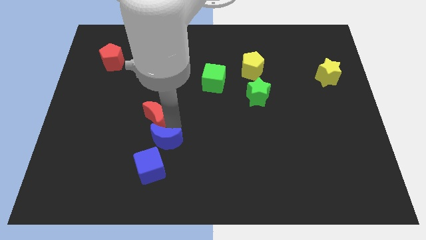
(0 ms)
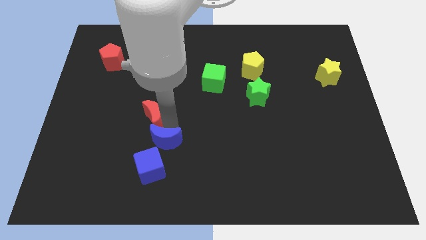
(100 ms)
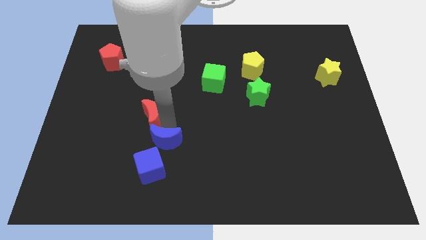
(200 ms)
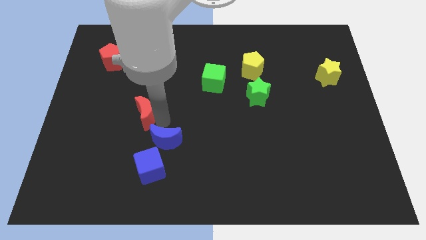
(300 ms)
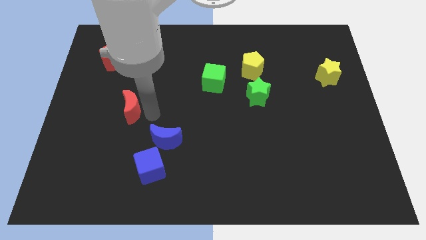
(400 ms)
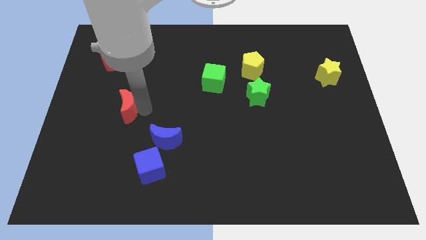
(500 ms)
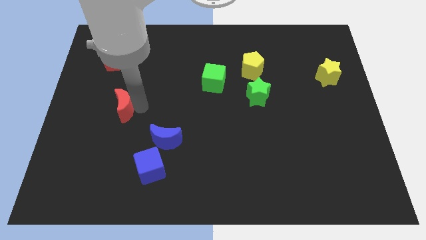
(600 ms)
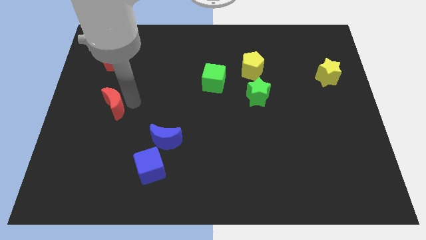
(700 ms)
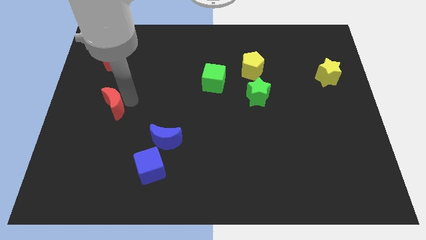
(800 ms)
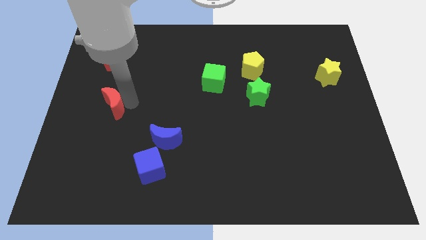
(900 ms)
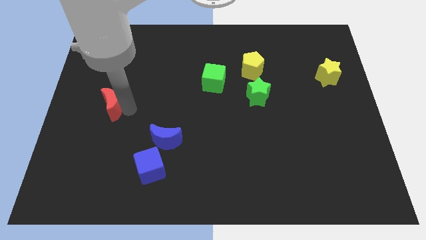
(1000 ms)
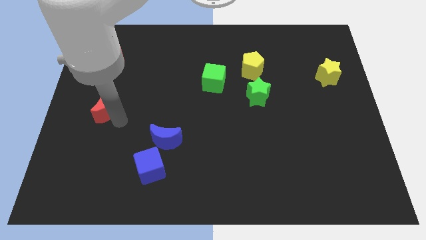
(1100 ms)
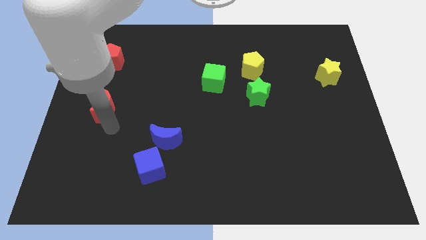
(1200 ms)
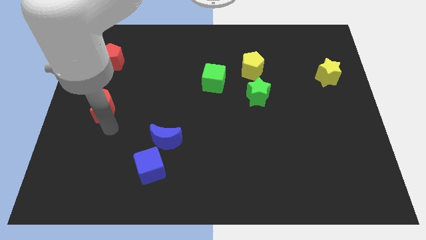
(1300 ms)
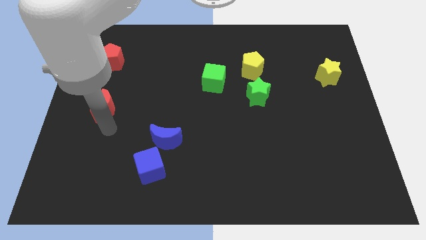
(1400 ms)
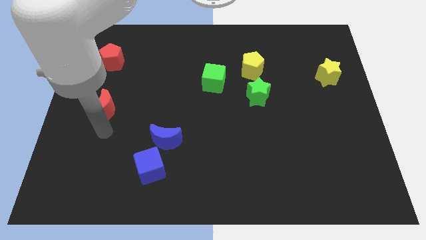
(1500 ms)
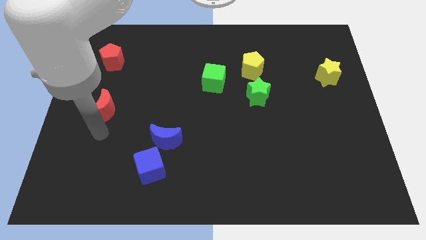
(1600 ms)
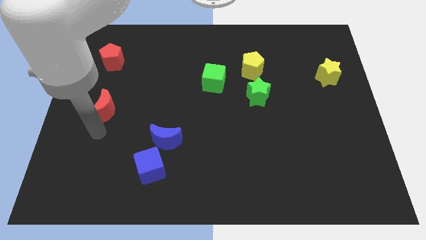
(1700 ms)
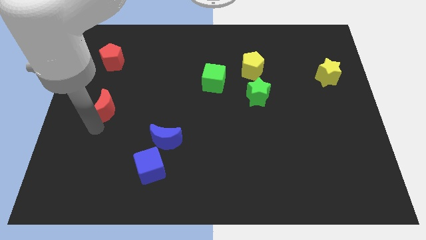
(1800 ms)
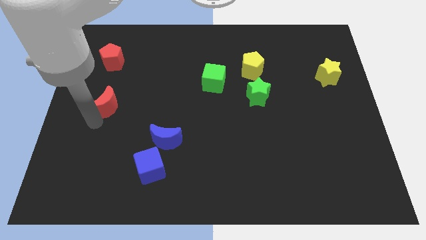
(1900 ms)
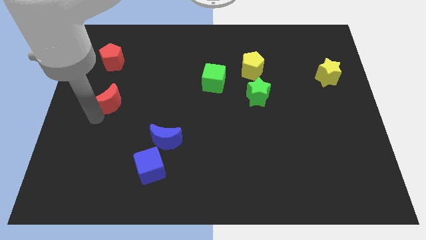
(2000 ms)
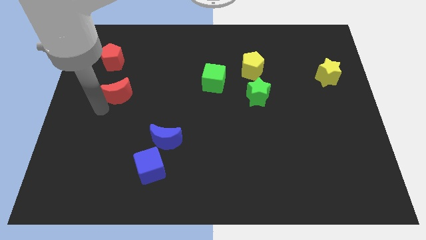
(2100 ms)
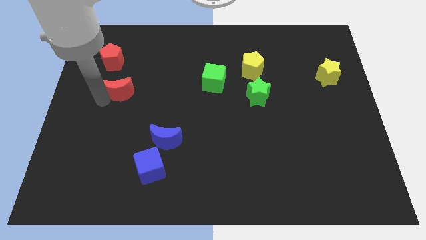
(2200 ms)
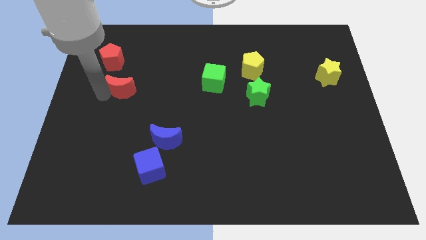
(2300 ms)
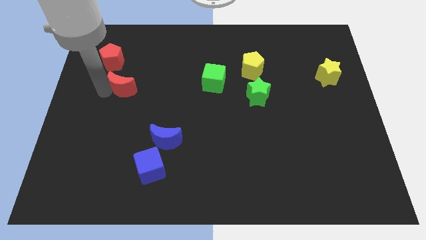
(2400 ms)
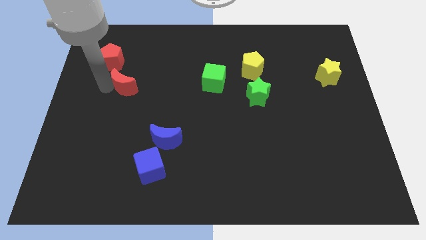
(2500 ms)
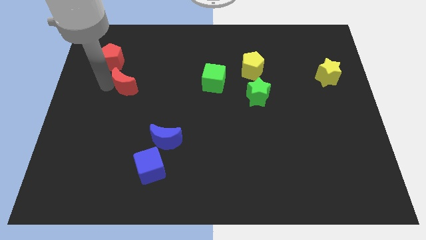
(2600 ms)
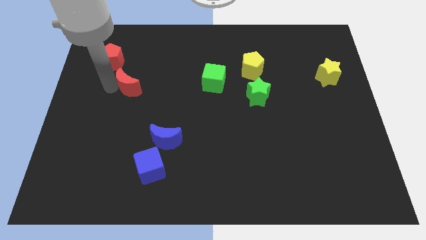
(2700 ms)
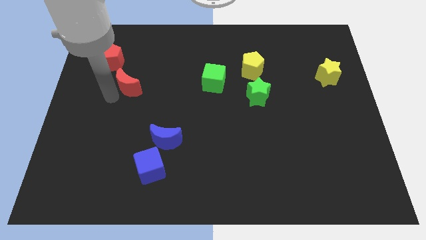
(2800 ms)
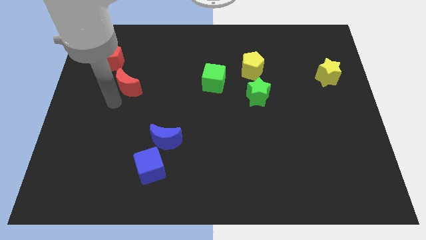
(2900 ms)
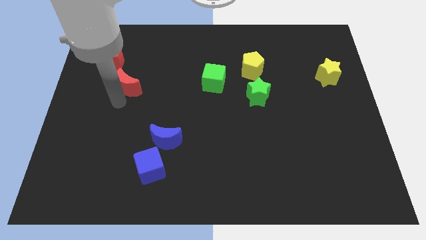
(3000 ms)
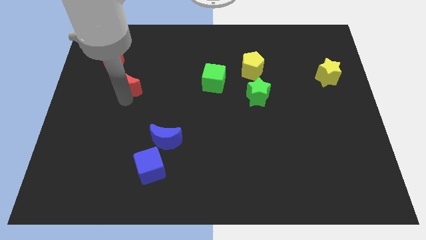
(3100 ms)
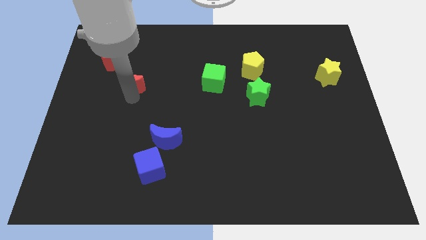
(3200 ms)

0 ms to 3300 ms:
move the red crescent towards the red pentagon

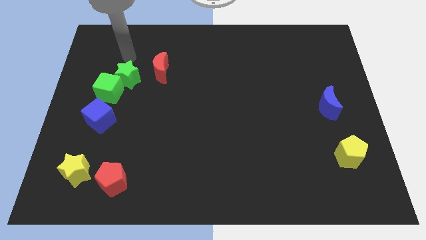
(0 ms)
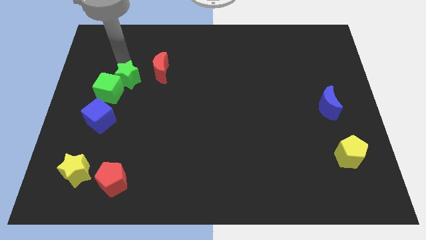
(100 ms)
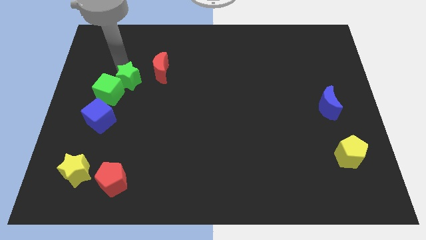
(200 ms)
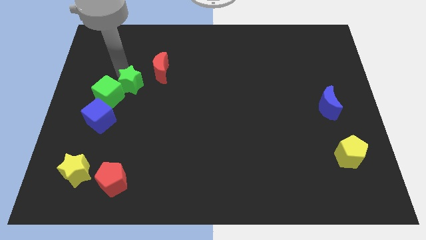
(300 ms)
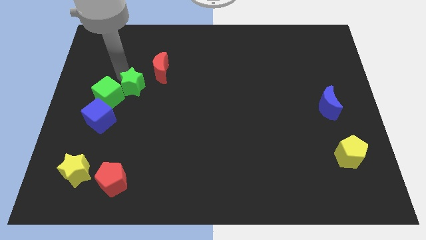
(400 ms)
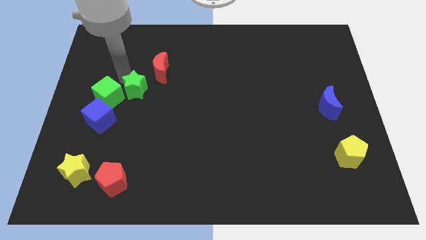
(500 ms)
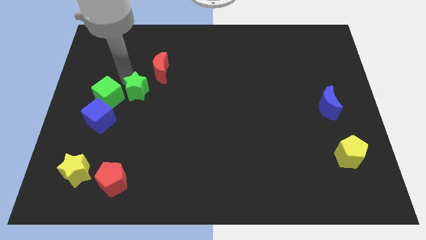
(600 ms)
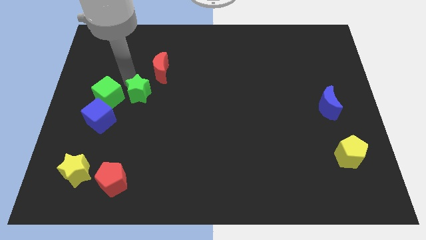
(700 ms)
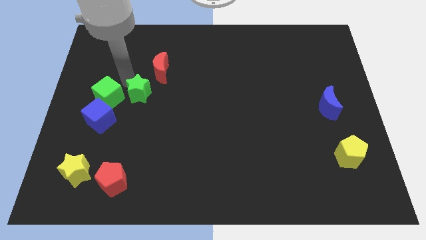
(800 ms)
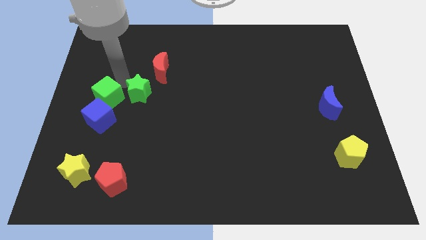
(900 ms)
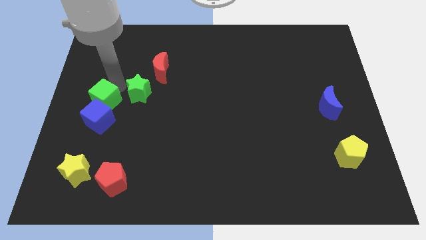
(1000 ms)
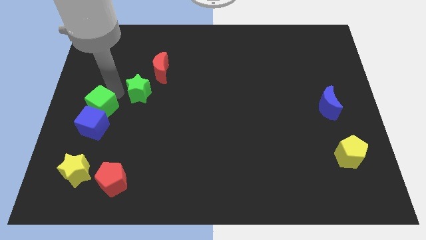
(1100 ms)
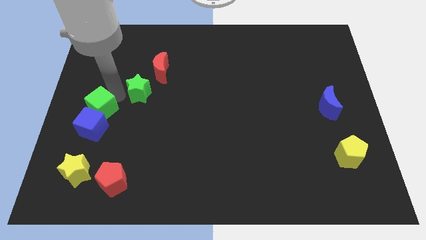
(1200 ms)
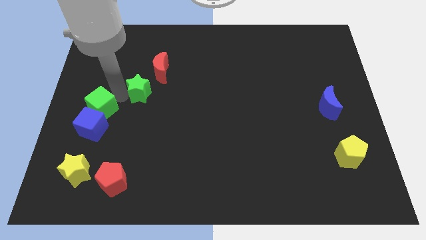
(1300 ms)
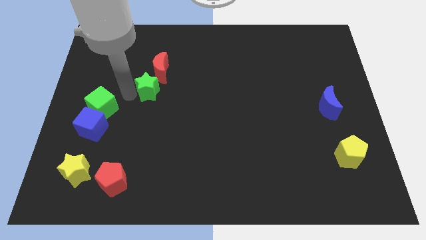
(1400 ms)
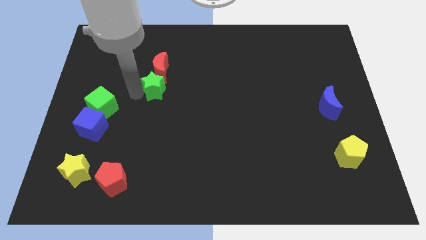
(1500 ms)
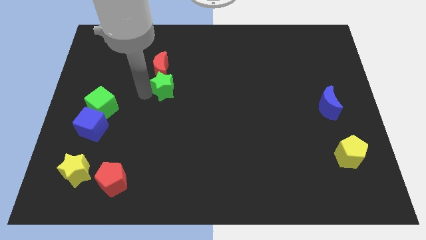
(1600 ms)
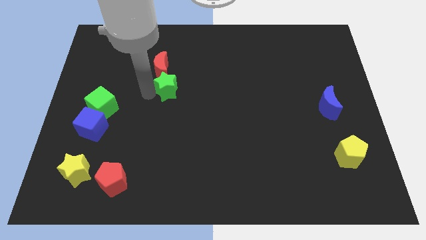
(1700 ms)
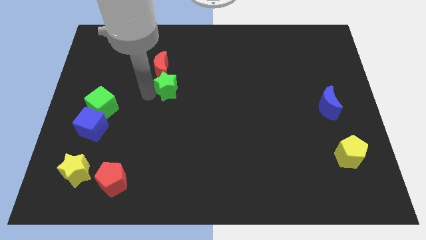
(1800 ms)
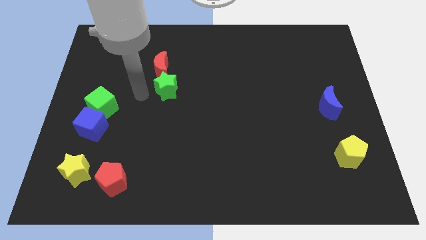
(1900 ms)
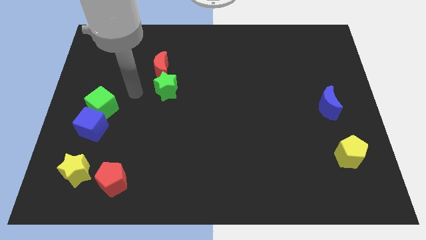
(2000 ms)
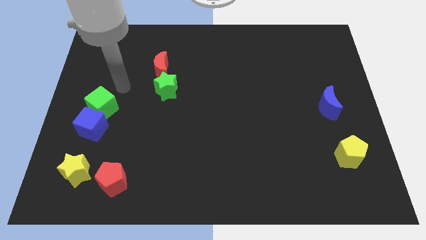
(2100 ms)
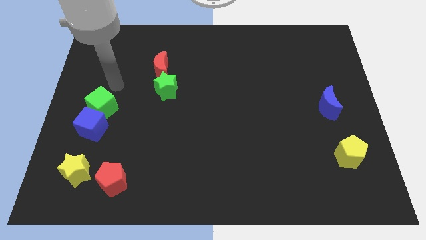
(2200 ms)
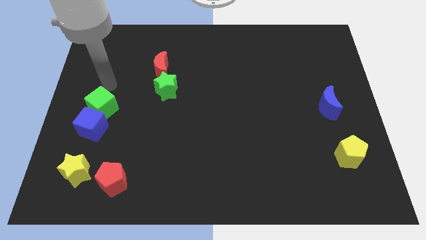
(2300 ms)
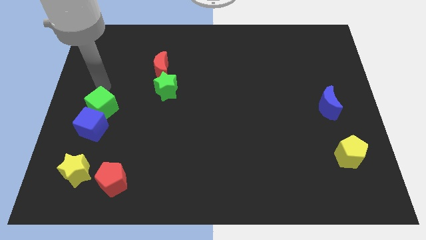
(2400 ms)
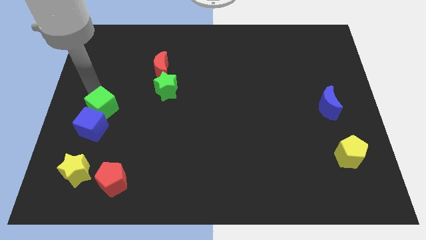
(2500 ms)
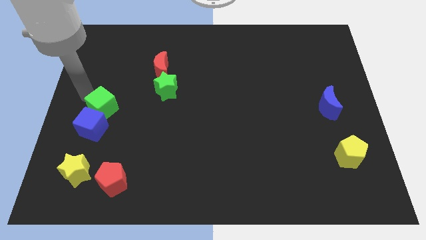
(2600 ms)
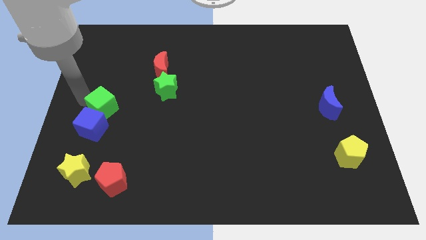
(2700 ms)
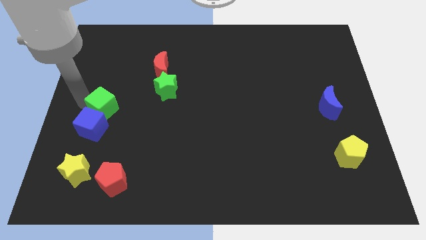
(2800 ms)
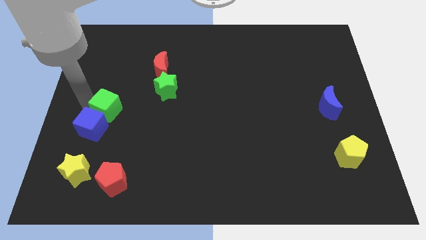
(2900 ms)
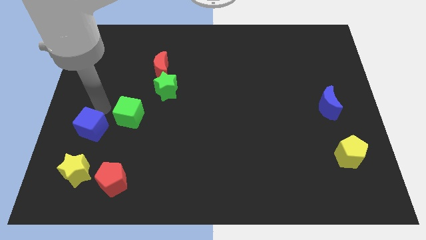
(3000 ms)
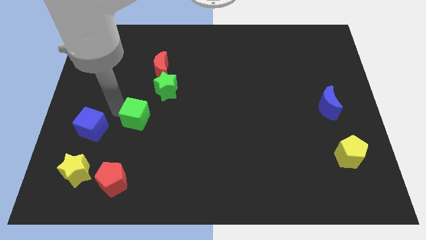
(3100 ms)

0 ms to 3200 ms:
separate green blocks from each other

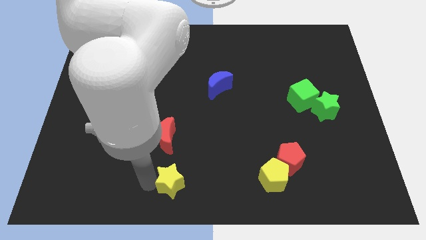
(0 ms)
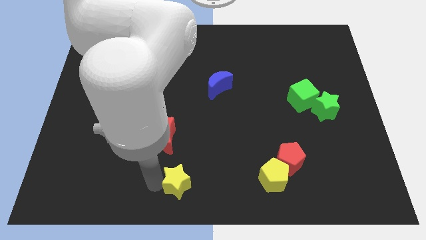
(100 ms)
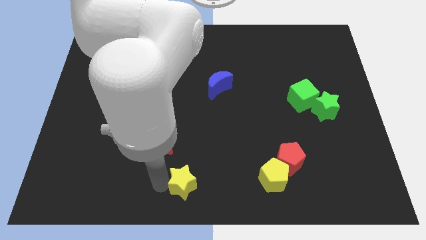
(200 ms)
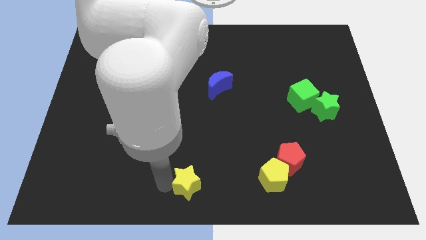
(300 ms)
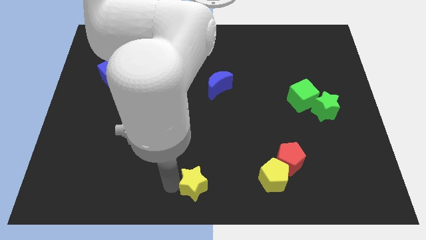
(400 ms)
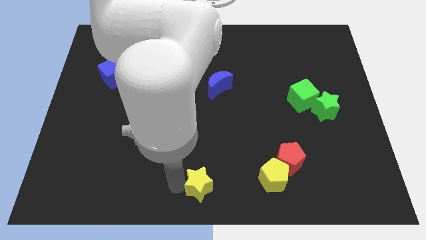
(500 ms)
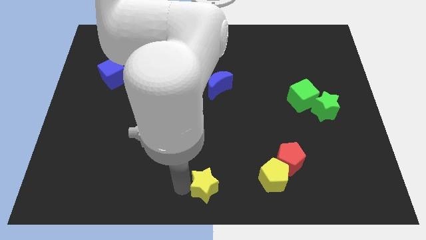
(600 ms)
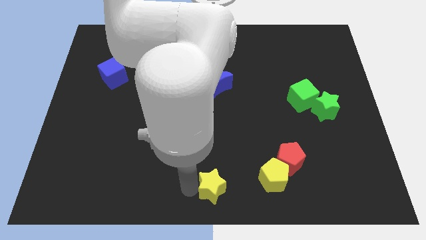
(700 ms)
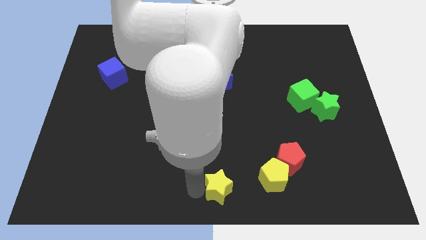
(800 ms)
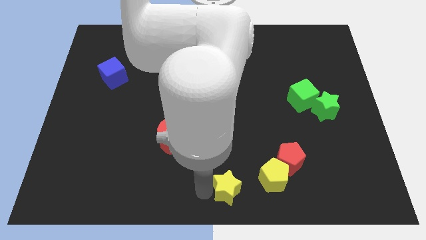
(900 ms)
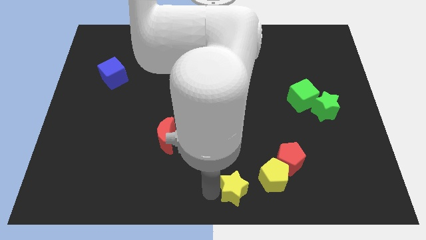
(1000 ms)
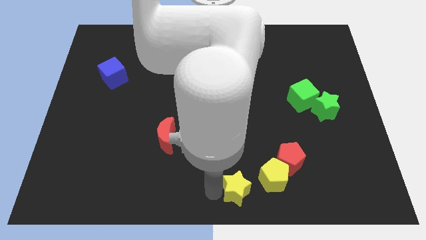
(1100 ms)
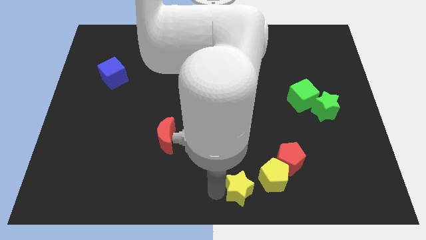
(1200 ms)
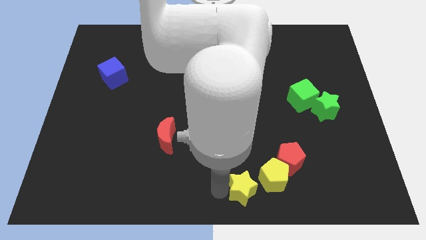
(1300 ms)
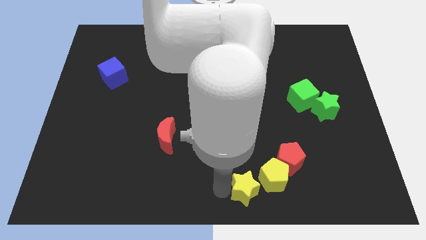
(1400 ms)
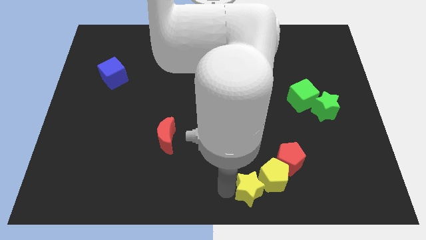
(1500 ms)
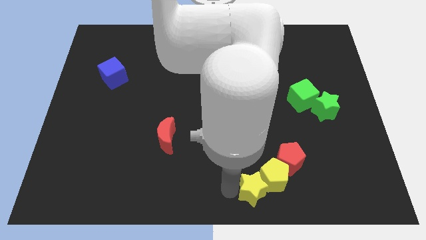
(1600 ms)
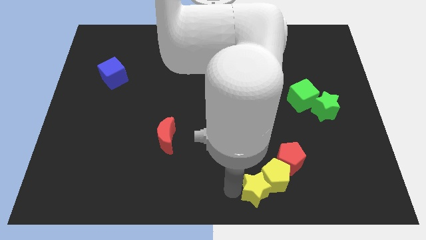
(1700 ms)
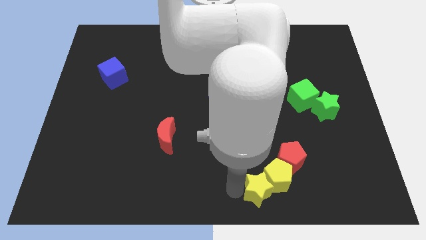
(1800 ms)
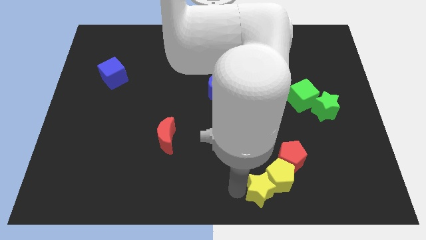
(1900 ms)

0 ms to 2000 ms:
move yellow star into yellow pentagon

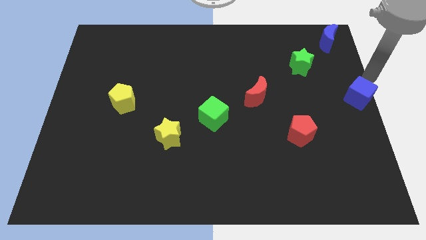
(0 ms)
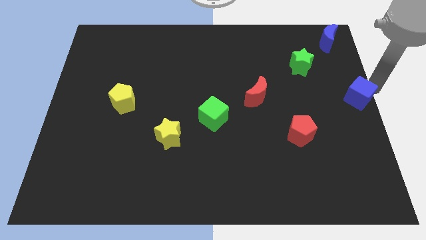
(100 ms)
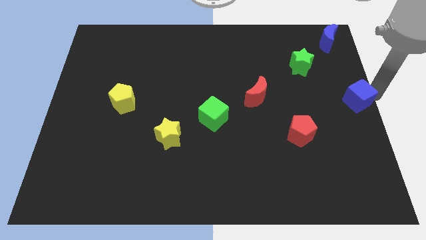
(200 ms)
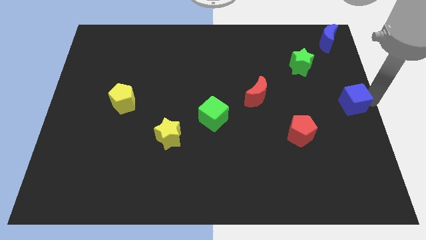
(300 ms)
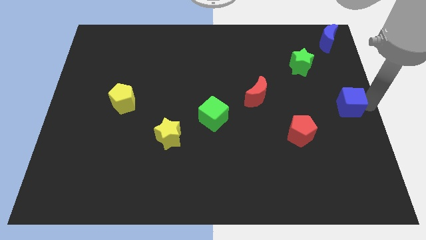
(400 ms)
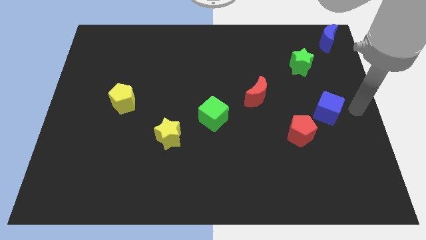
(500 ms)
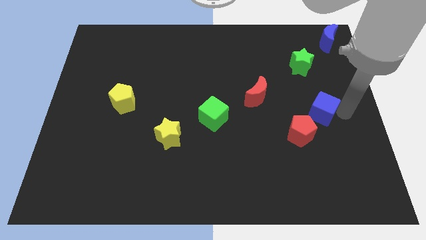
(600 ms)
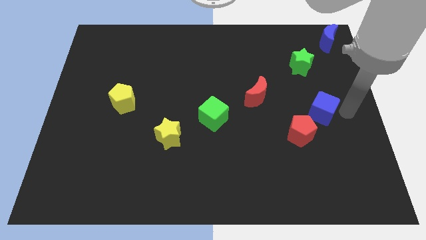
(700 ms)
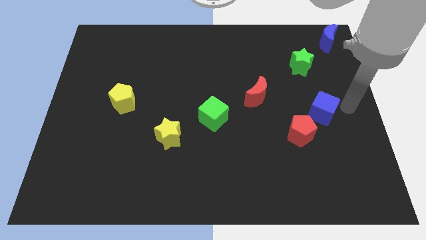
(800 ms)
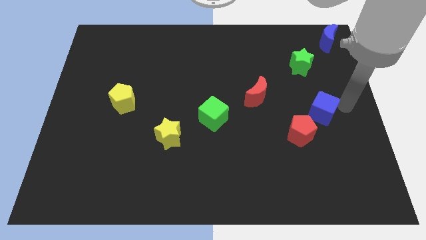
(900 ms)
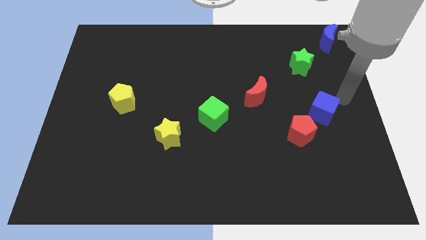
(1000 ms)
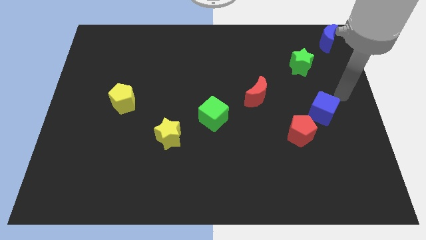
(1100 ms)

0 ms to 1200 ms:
move the blue cube to the top right of the red pentagon
